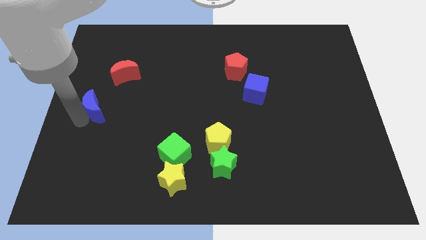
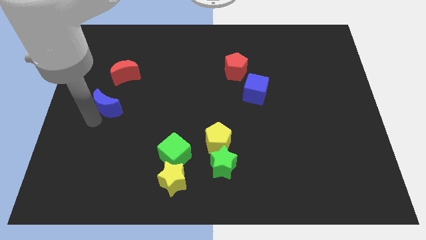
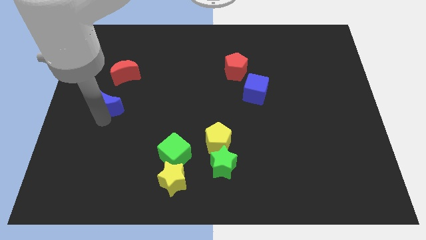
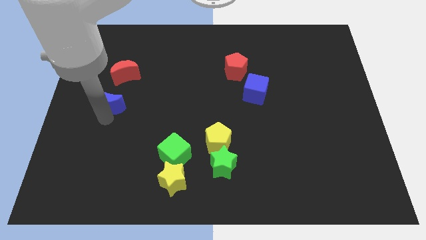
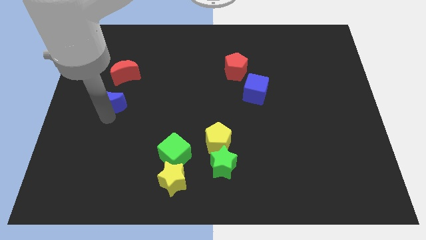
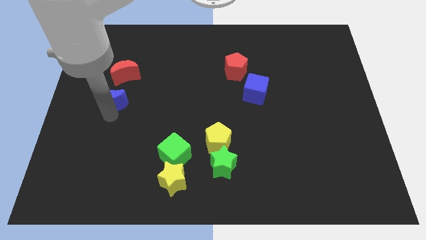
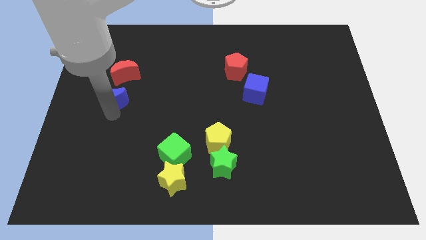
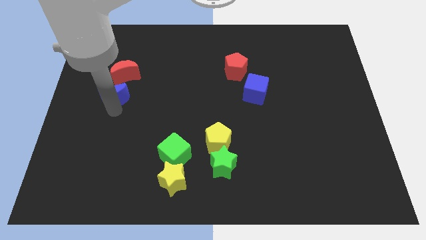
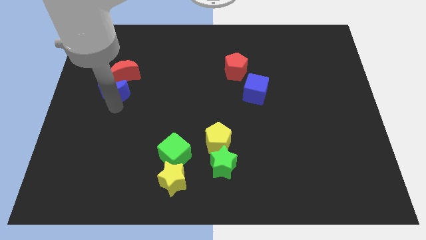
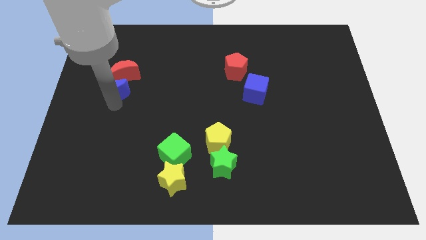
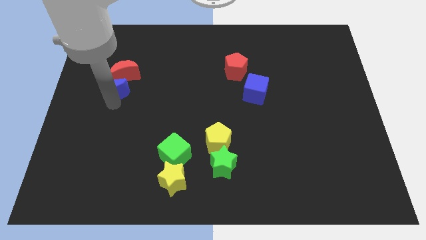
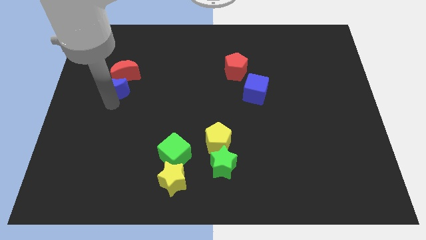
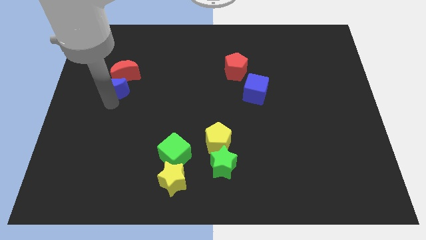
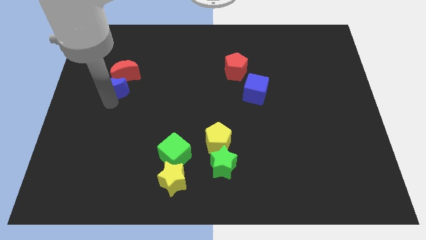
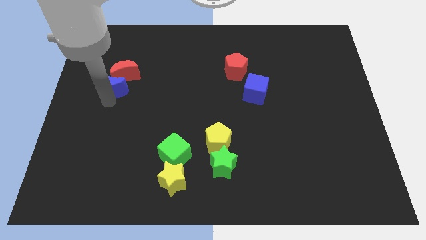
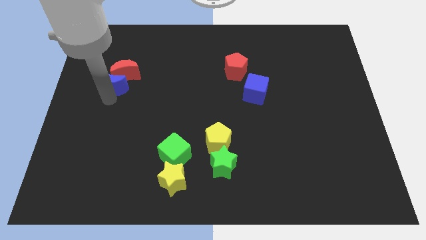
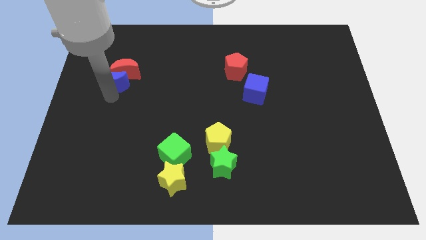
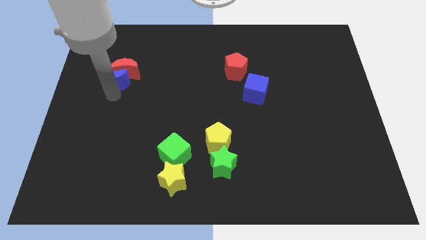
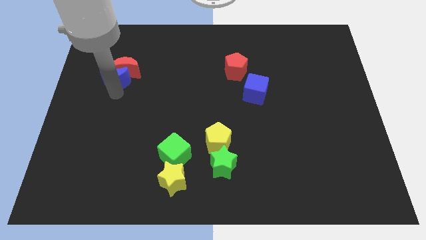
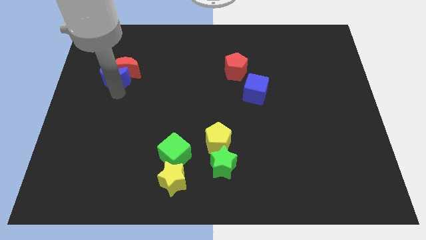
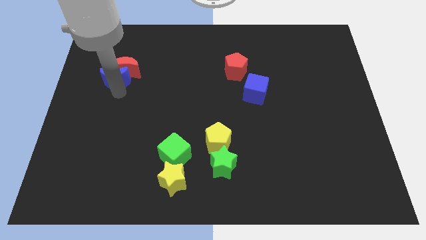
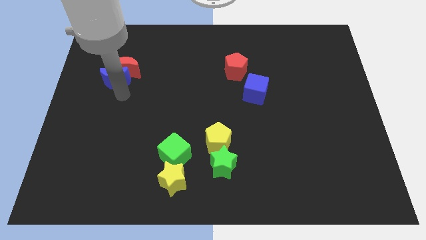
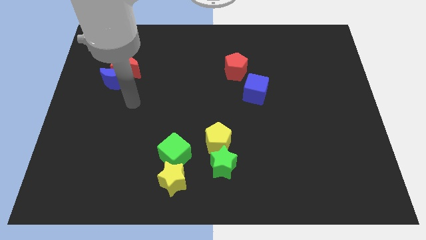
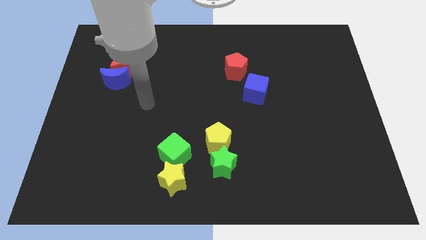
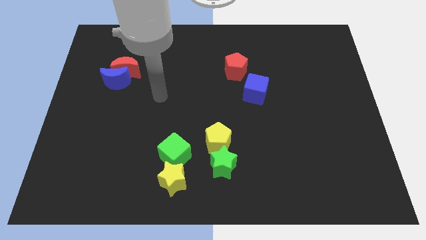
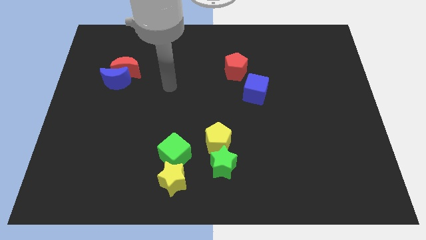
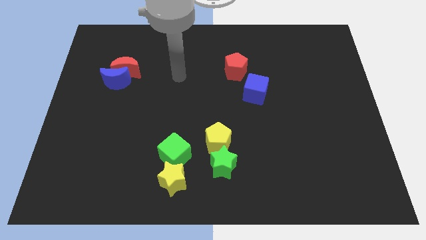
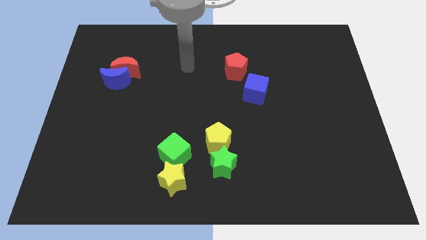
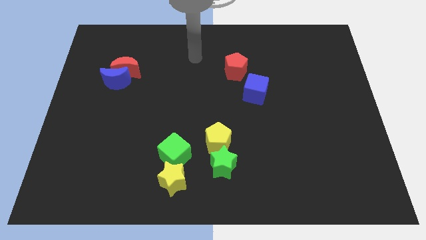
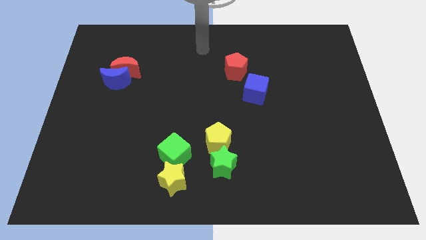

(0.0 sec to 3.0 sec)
push the blue crescent close to the red crescent

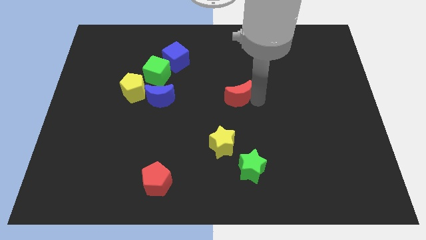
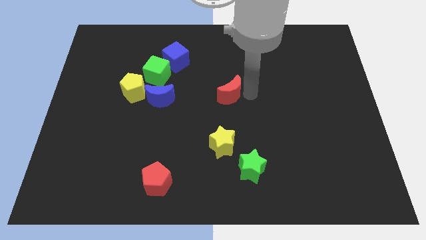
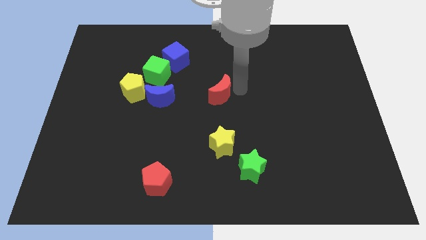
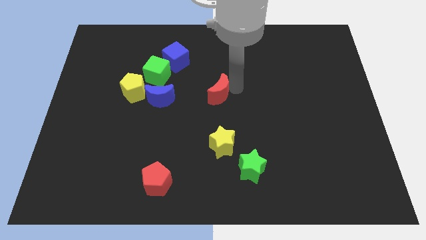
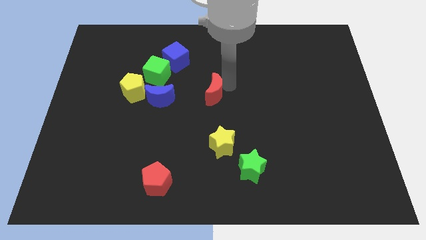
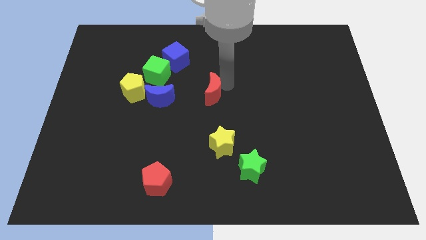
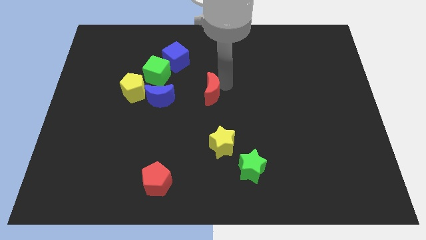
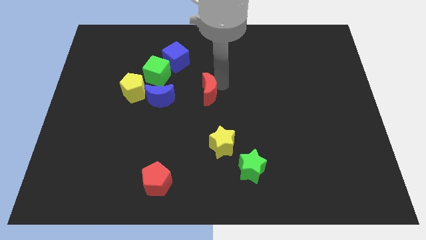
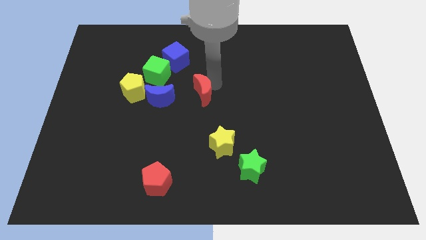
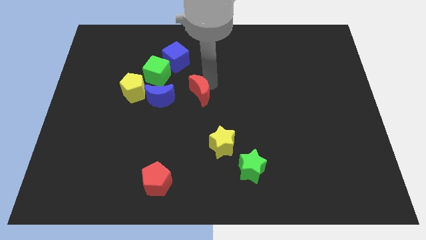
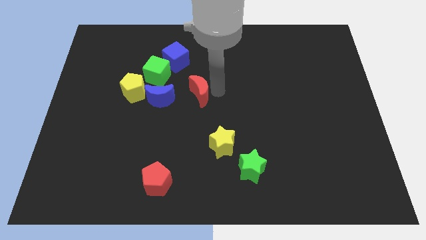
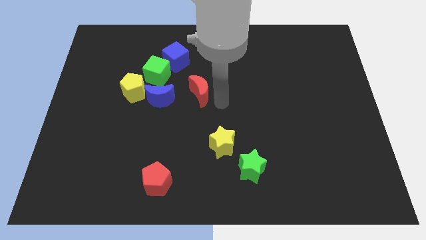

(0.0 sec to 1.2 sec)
move the red crescent right to the blue crescent

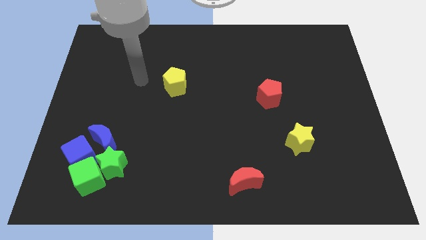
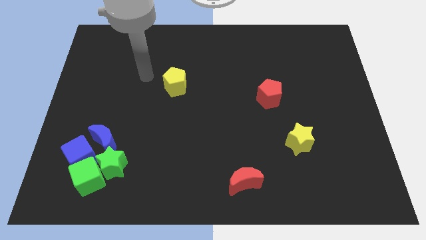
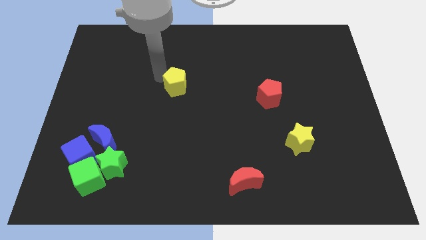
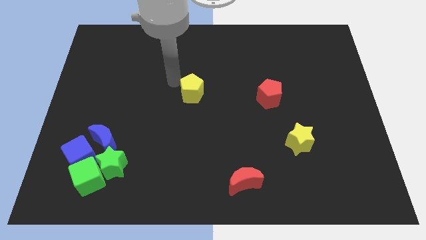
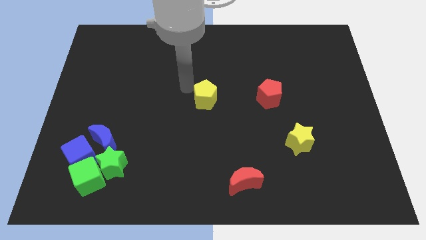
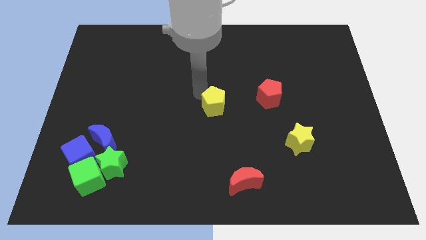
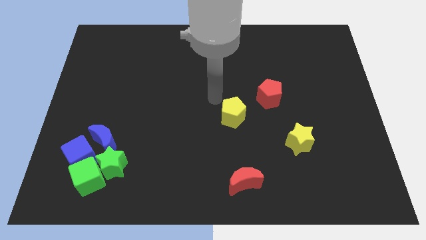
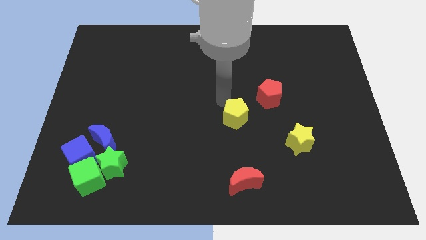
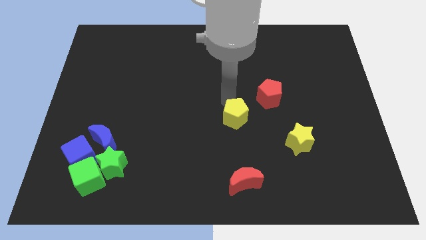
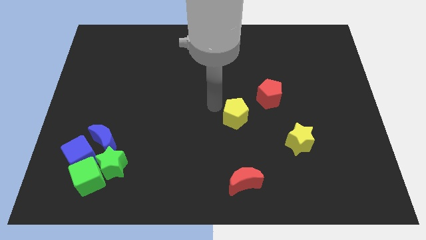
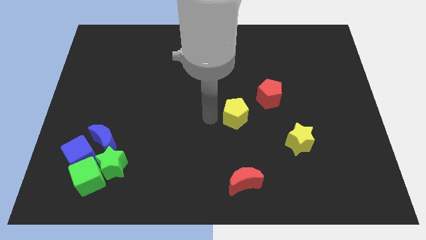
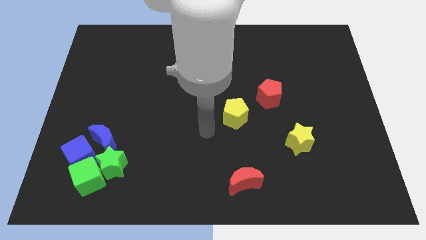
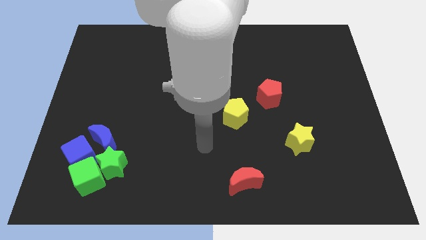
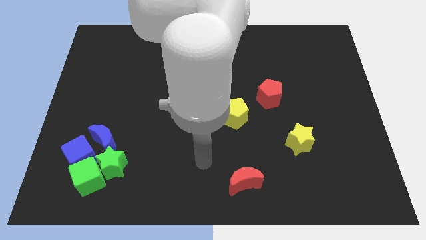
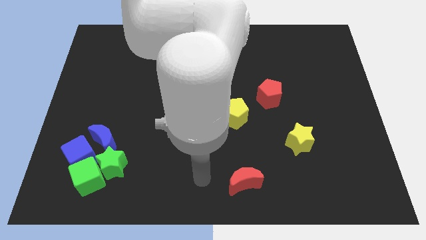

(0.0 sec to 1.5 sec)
push the yellow pentagon slightly towards the bottom of the board in diagonal position

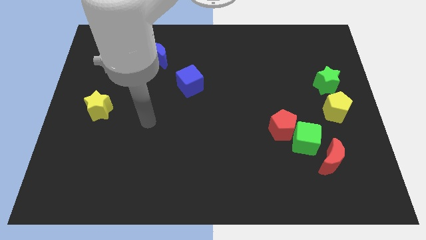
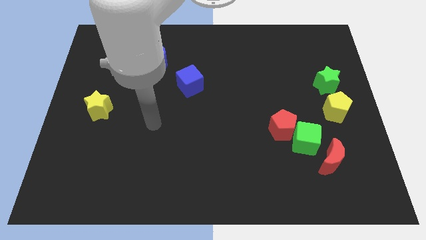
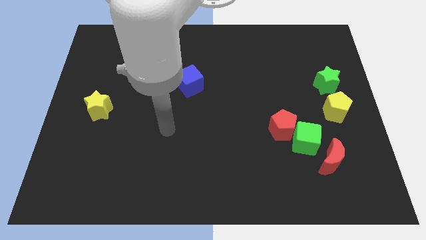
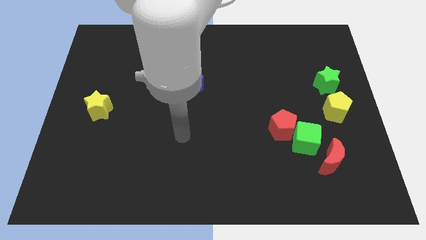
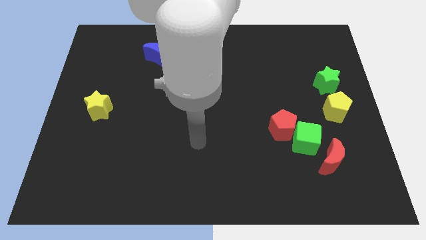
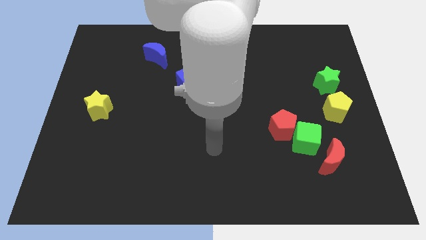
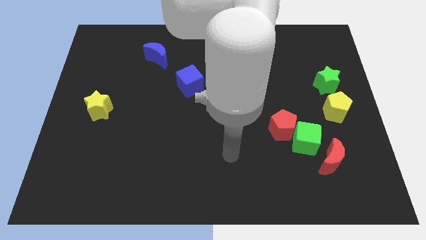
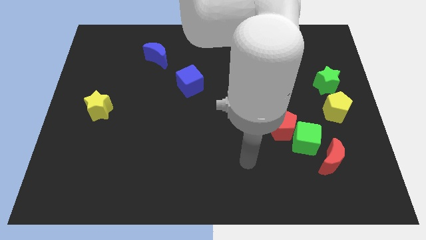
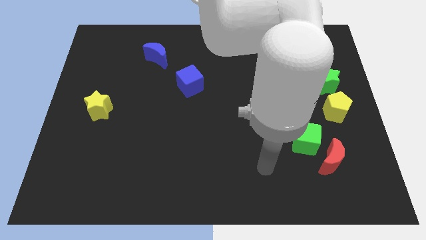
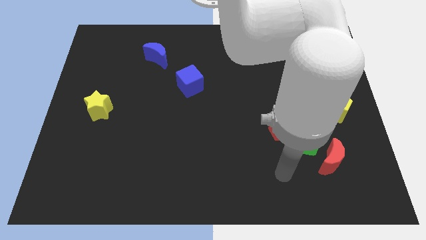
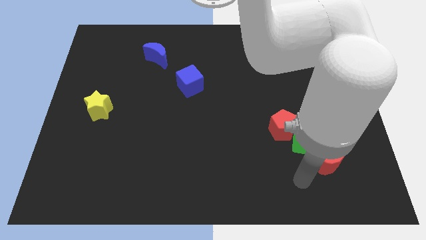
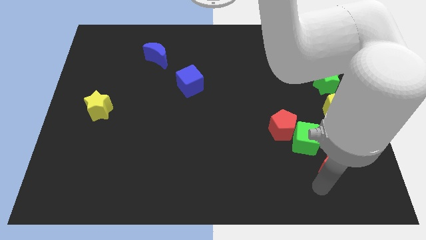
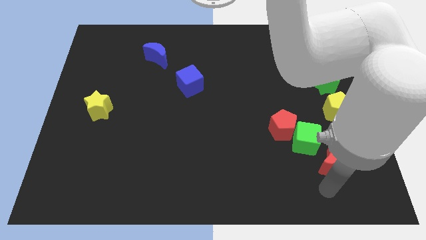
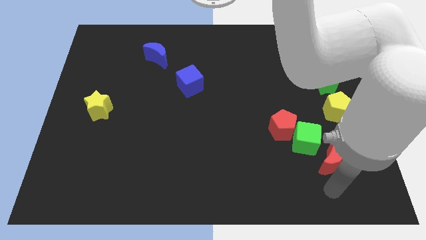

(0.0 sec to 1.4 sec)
put your arm below the red crescent

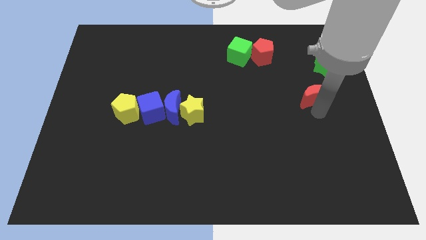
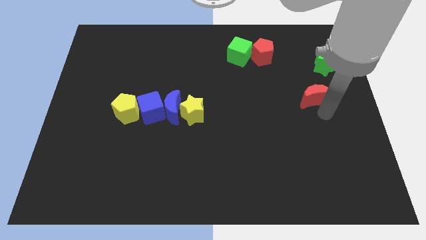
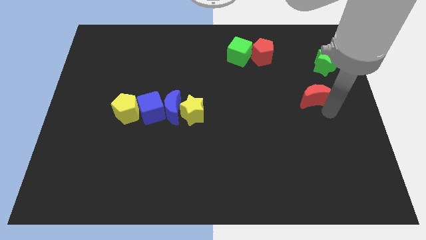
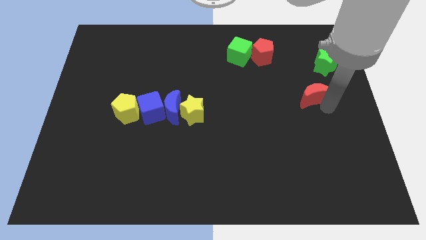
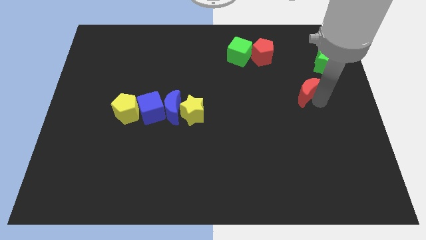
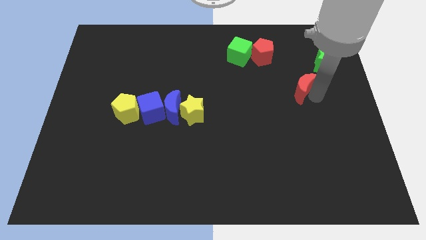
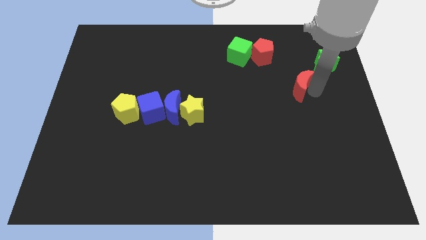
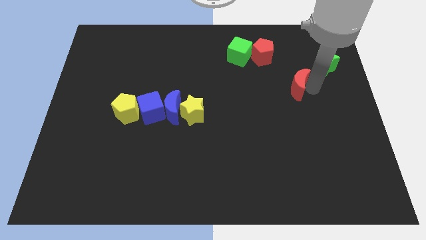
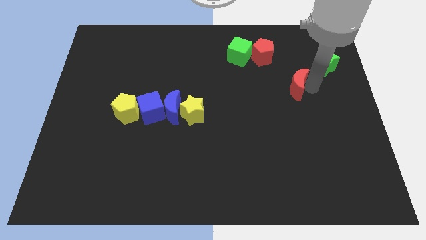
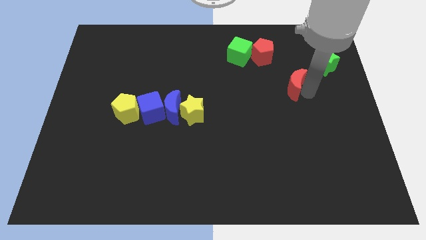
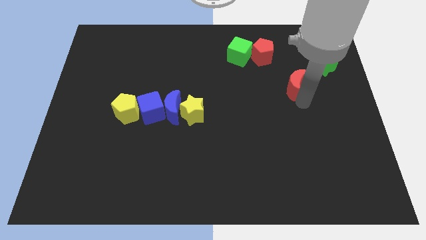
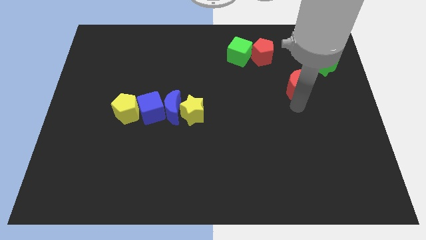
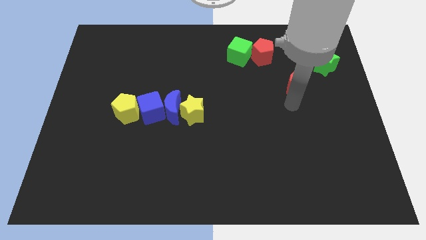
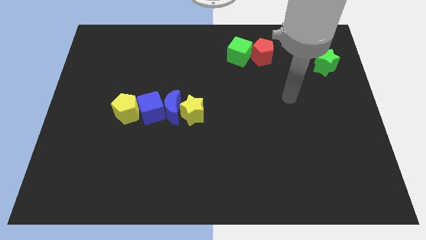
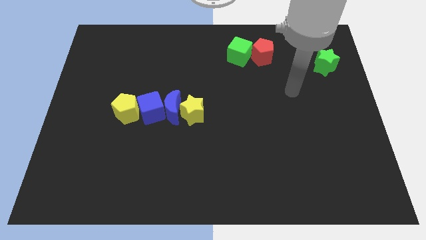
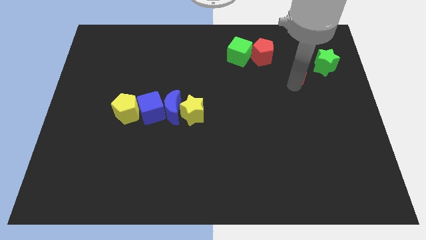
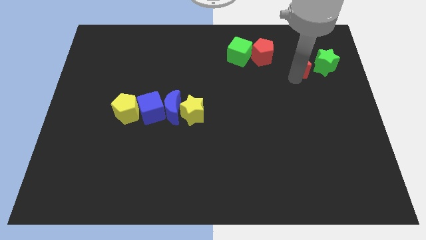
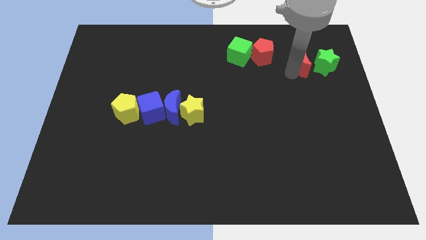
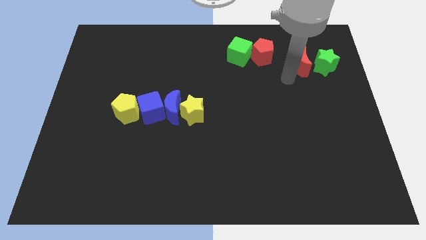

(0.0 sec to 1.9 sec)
move the red crescent to the left of the green star
